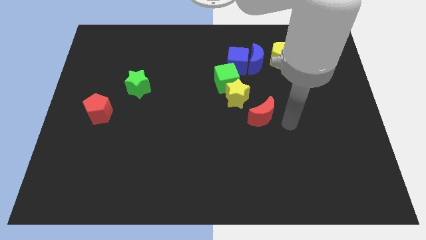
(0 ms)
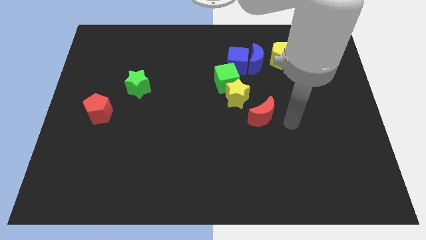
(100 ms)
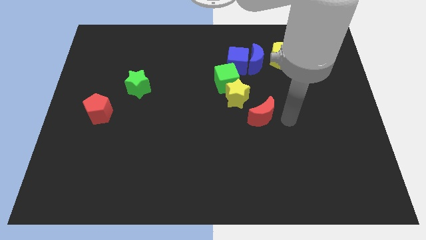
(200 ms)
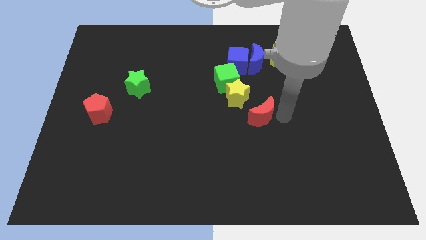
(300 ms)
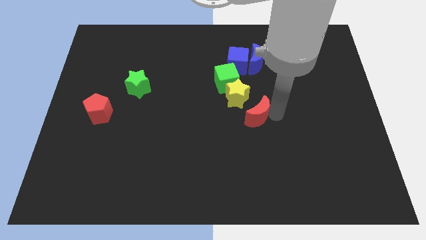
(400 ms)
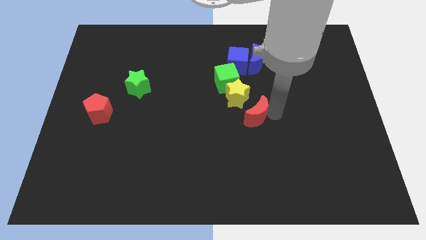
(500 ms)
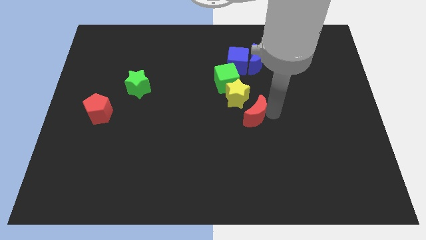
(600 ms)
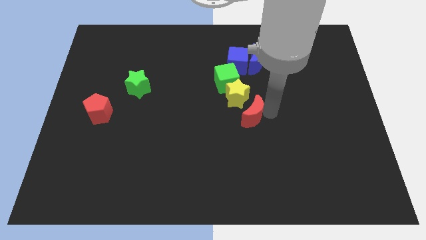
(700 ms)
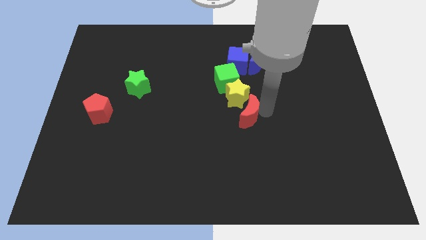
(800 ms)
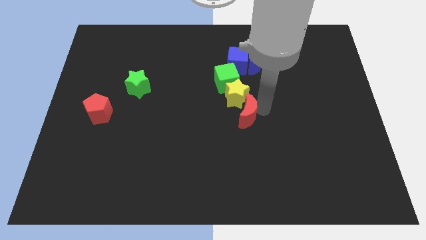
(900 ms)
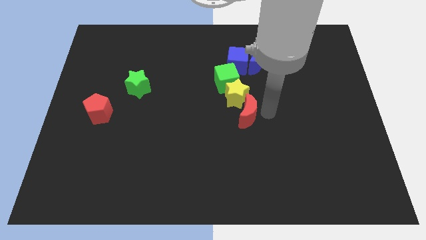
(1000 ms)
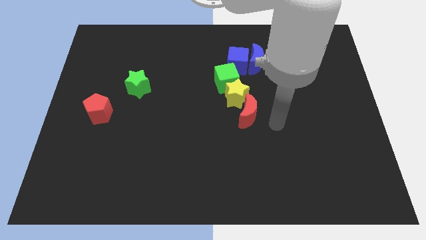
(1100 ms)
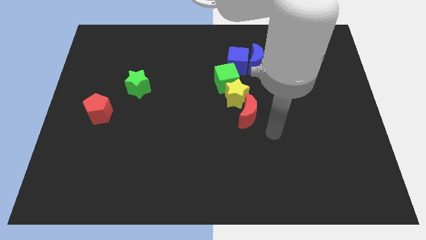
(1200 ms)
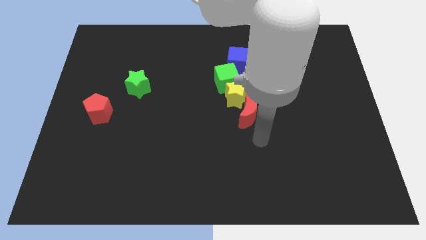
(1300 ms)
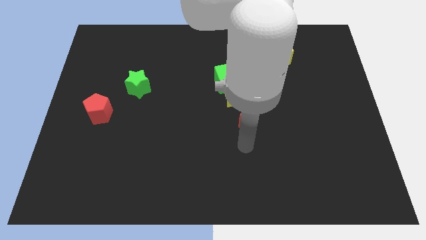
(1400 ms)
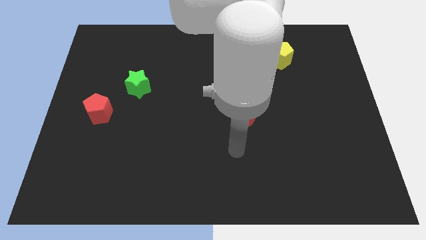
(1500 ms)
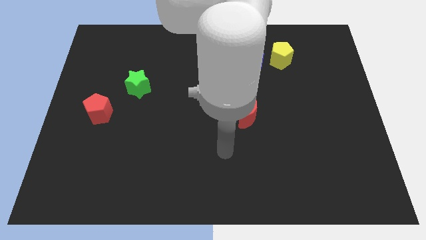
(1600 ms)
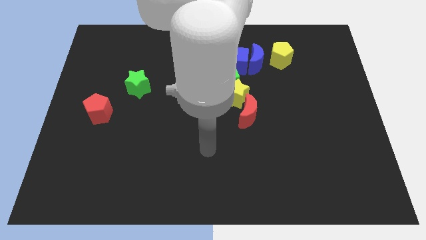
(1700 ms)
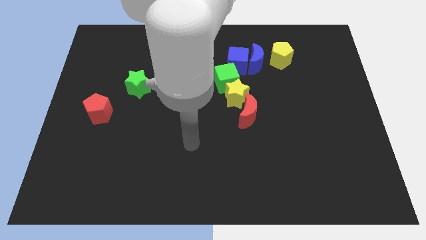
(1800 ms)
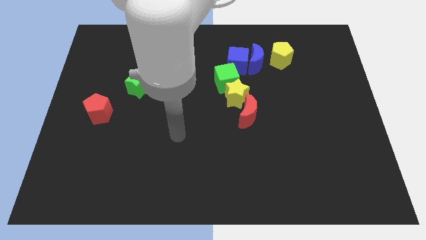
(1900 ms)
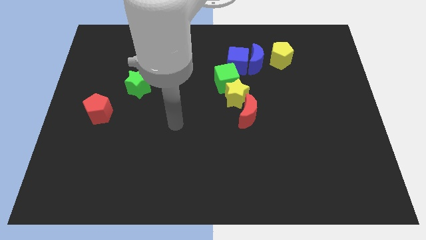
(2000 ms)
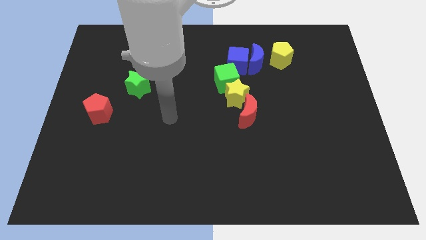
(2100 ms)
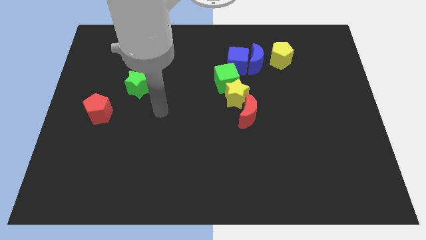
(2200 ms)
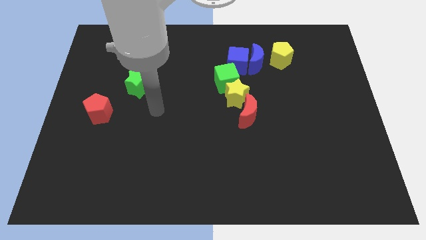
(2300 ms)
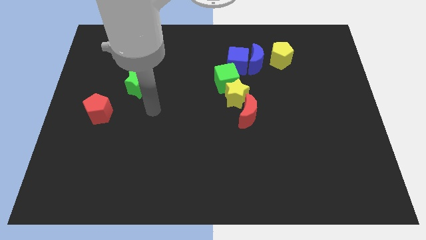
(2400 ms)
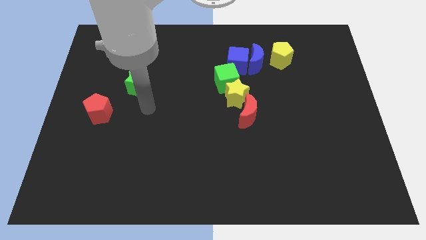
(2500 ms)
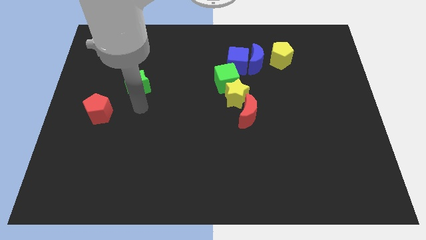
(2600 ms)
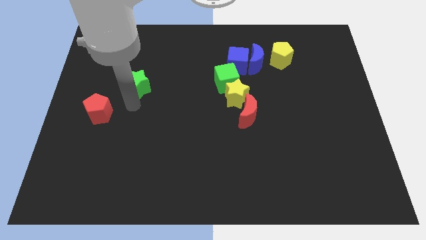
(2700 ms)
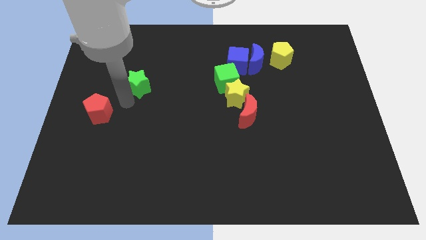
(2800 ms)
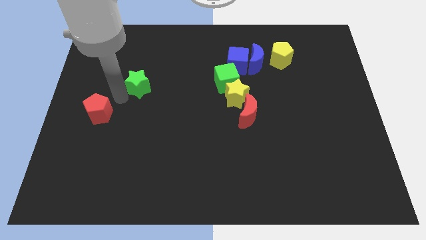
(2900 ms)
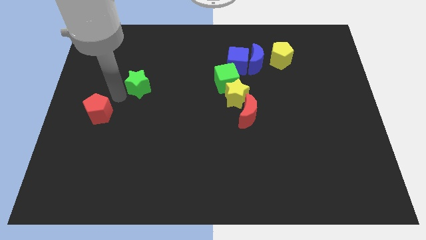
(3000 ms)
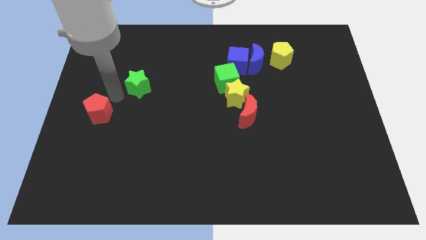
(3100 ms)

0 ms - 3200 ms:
push the red moon towards the yellow star and move away

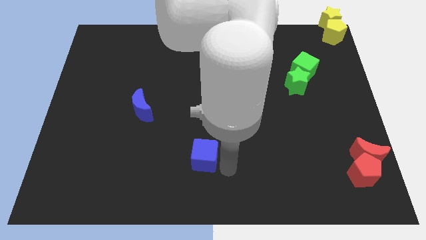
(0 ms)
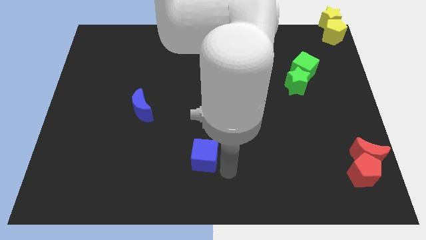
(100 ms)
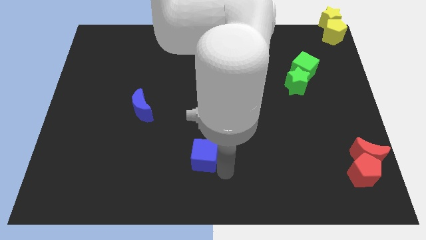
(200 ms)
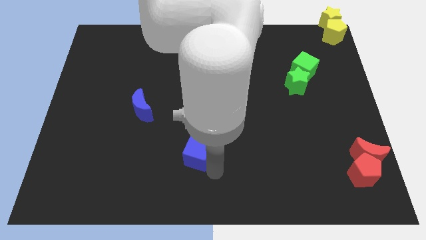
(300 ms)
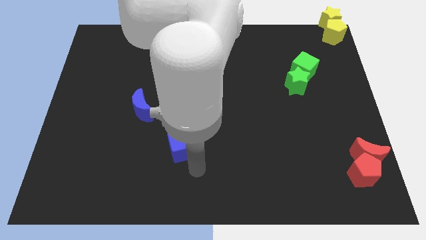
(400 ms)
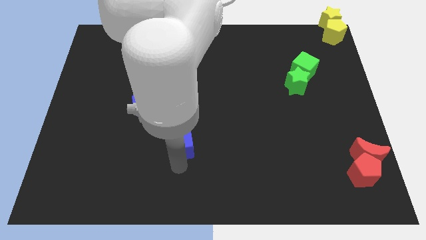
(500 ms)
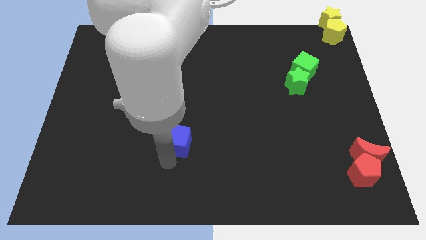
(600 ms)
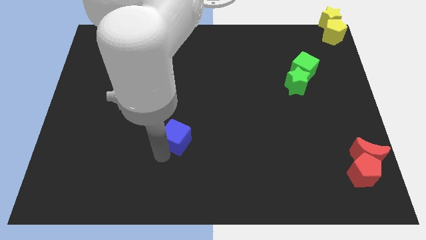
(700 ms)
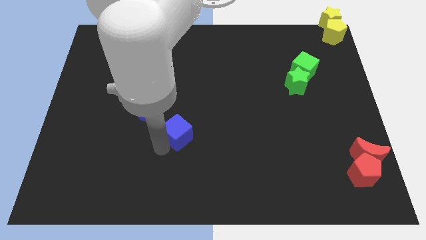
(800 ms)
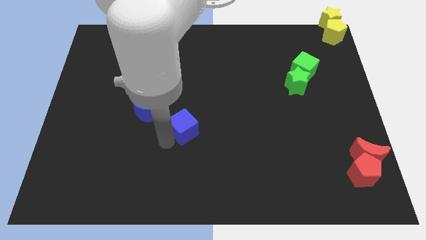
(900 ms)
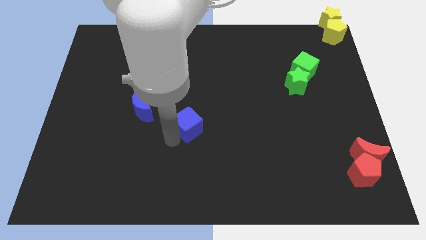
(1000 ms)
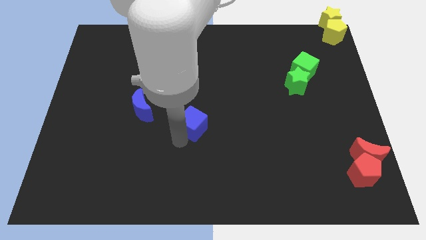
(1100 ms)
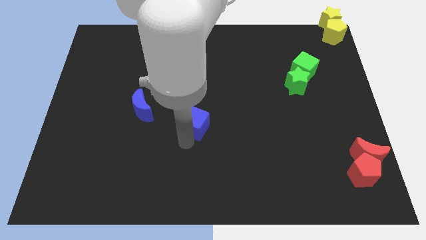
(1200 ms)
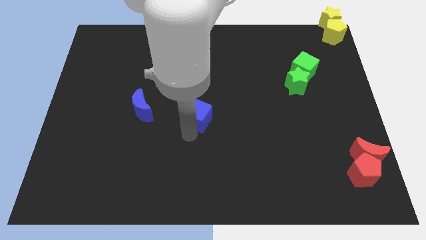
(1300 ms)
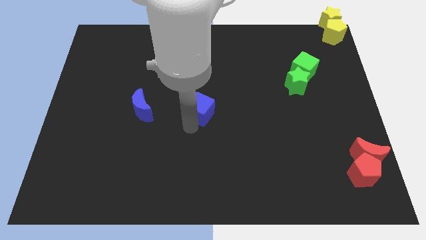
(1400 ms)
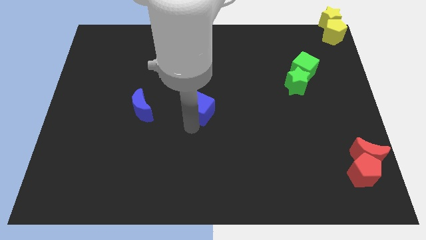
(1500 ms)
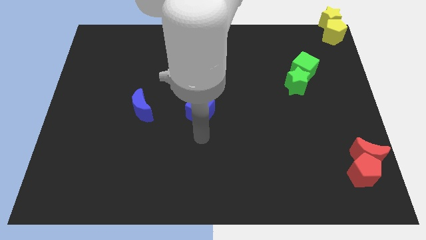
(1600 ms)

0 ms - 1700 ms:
move the blue cube right to the blue moon

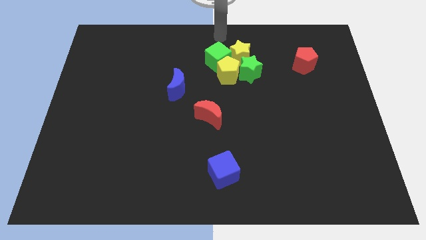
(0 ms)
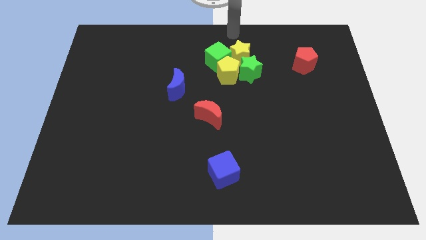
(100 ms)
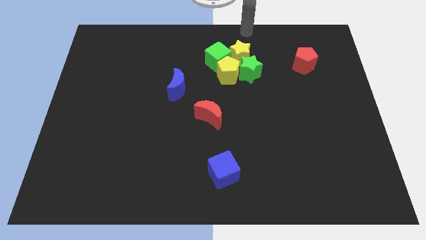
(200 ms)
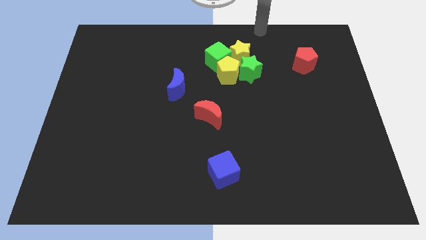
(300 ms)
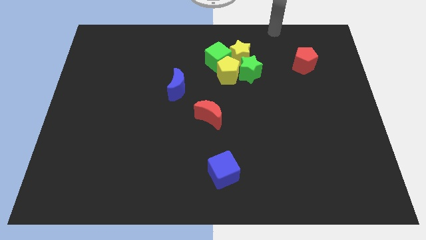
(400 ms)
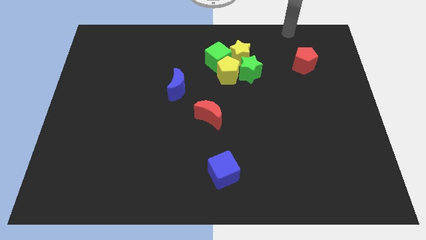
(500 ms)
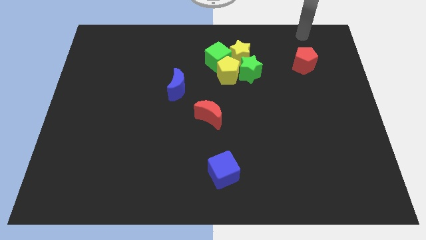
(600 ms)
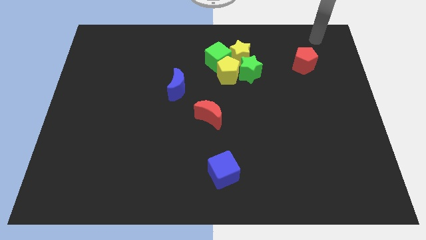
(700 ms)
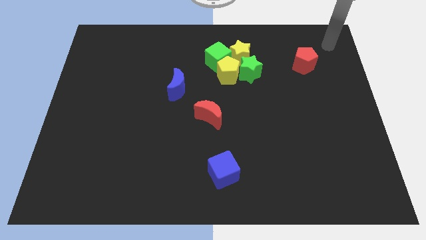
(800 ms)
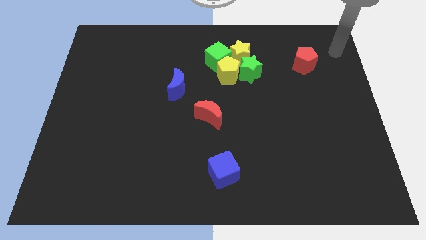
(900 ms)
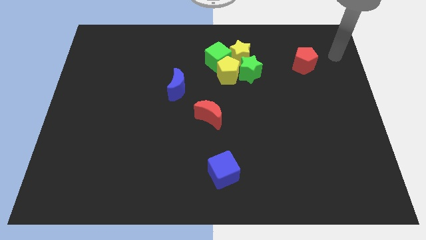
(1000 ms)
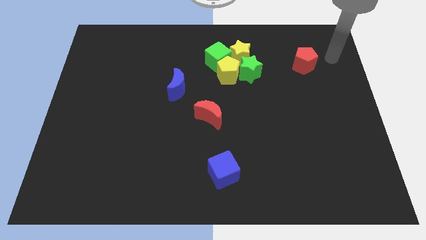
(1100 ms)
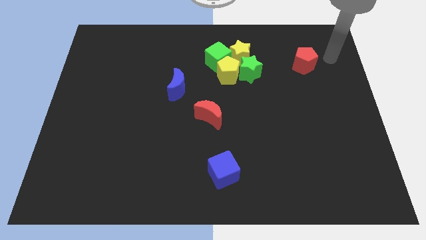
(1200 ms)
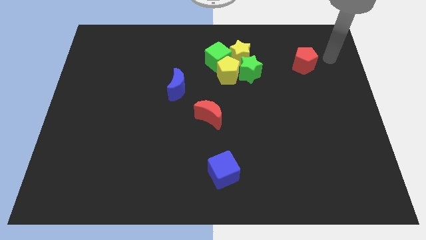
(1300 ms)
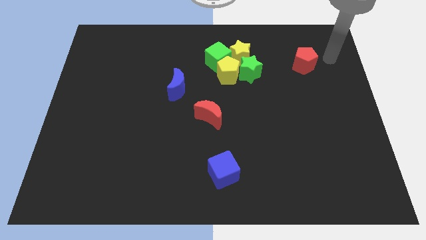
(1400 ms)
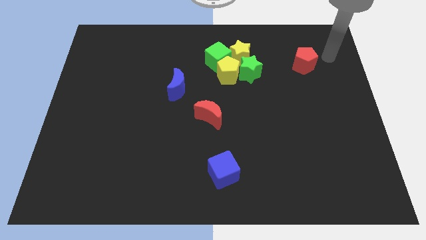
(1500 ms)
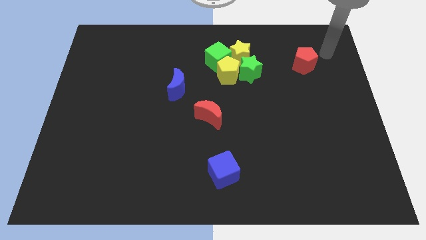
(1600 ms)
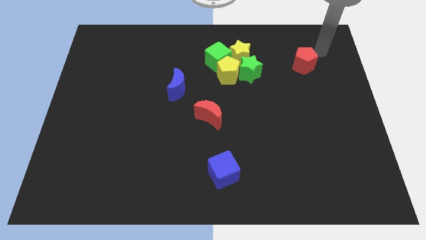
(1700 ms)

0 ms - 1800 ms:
move your arm diagonally right of the red pentagon

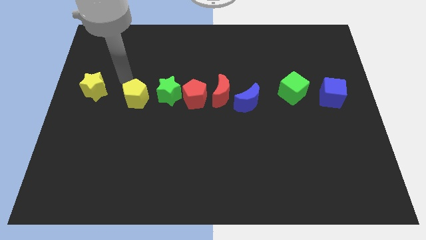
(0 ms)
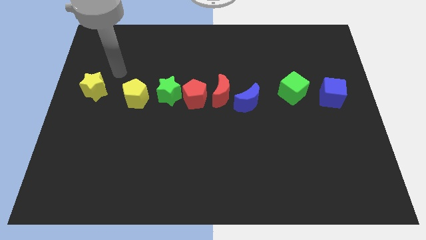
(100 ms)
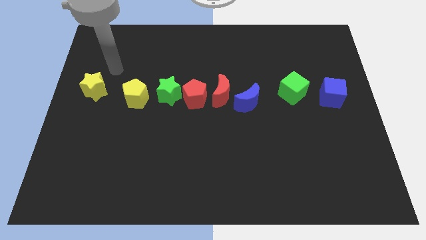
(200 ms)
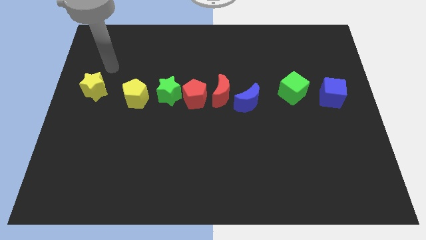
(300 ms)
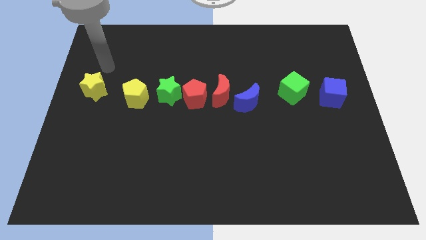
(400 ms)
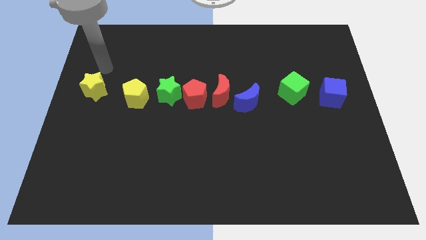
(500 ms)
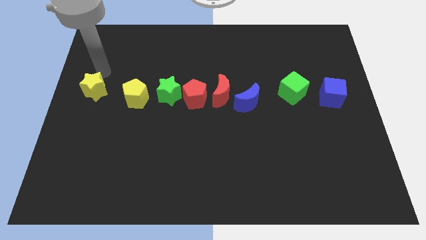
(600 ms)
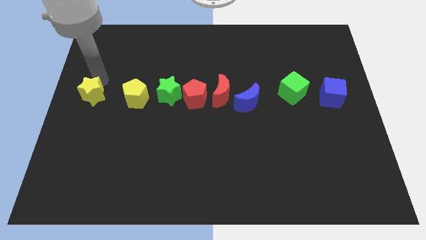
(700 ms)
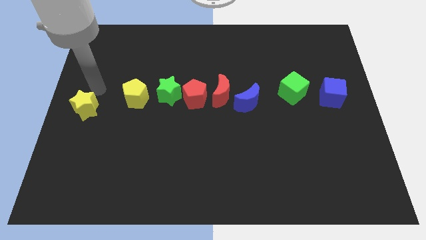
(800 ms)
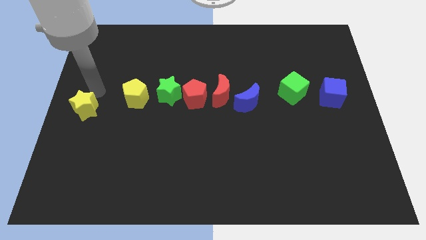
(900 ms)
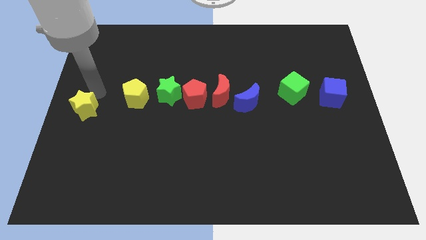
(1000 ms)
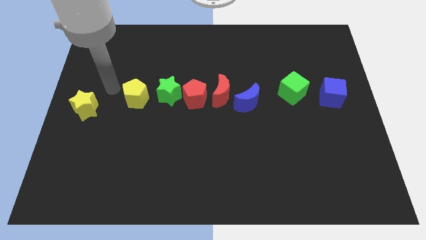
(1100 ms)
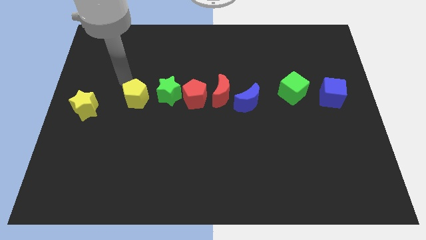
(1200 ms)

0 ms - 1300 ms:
move the yellow star downwards

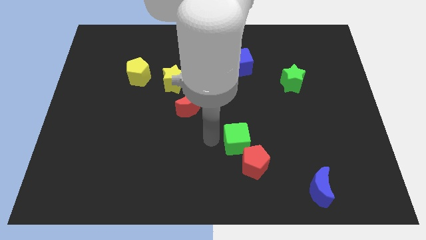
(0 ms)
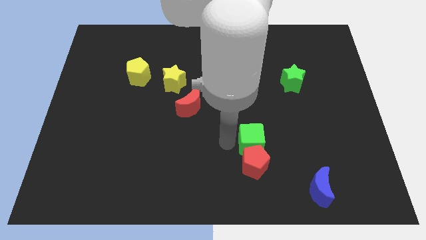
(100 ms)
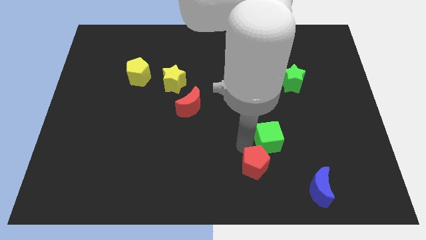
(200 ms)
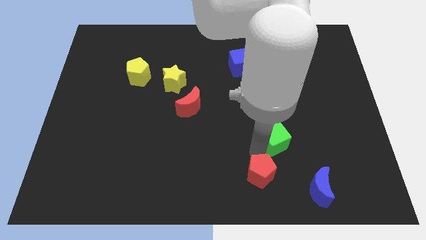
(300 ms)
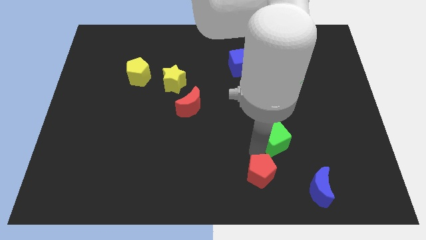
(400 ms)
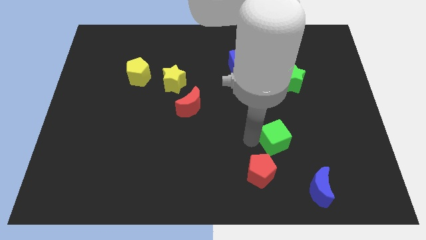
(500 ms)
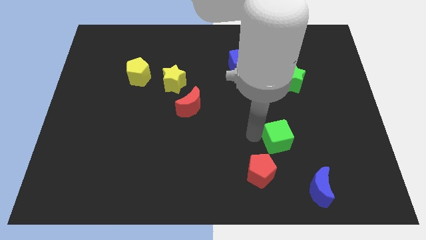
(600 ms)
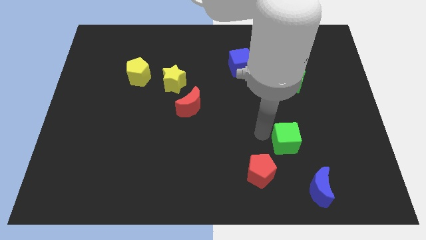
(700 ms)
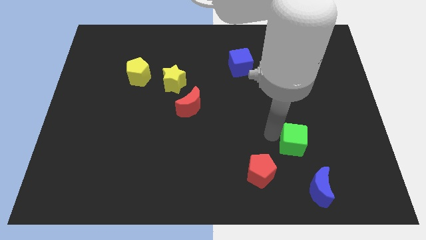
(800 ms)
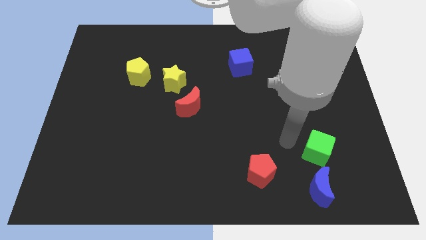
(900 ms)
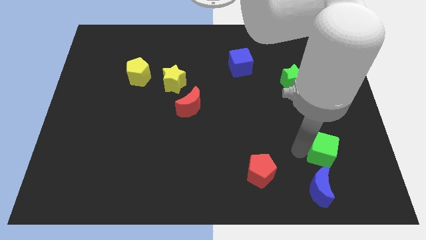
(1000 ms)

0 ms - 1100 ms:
separate the green cube from red crescent
